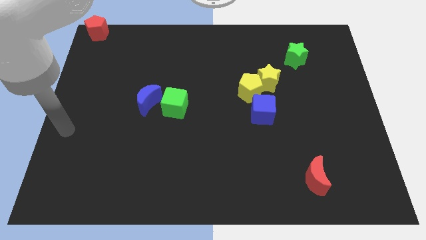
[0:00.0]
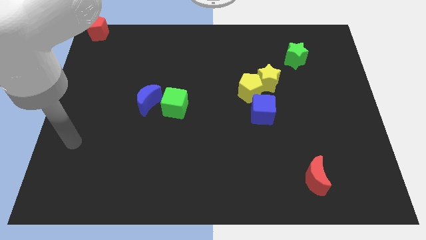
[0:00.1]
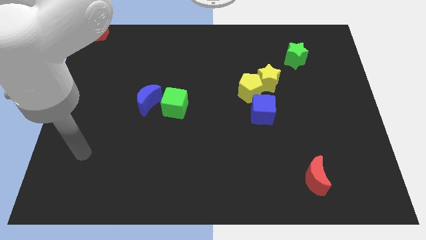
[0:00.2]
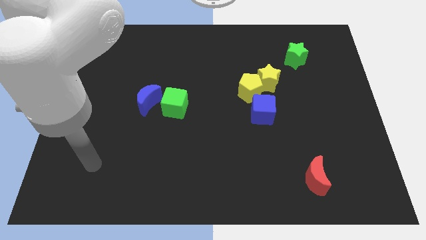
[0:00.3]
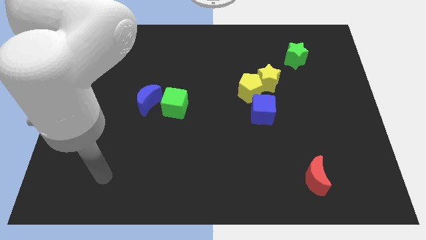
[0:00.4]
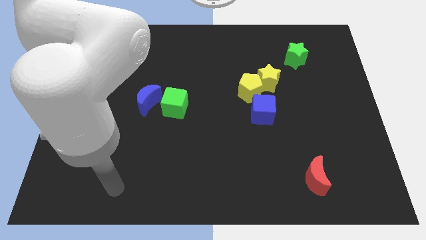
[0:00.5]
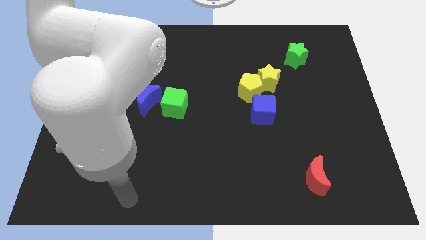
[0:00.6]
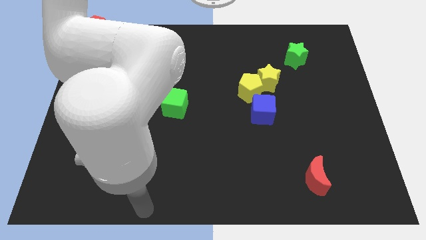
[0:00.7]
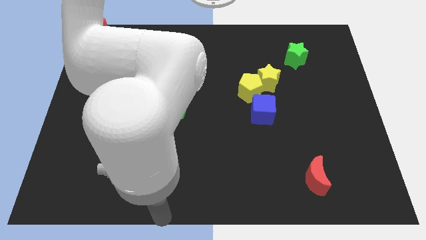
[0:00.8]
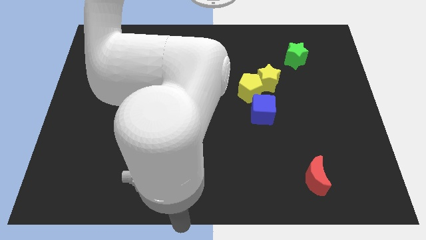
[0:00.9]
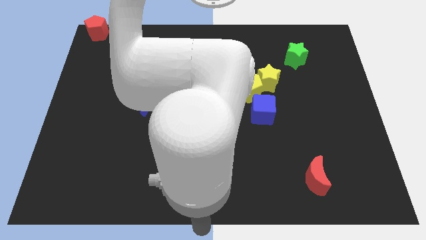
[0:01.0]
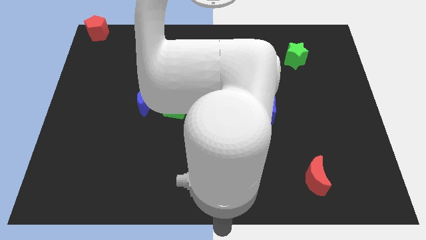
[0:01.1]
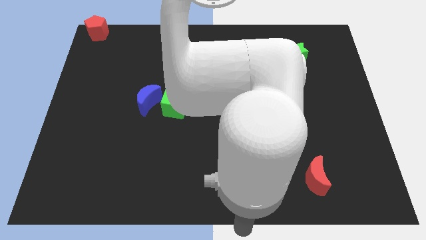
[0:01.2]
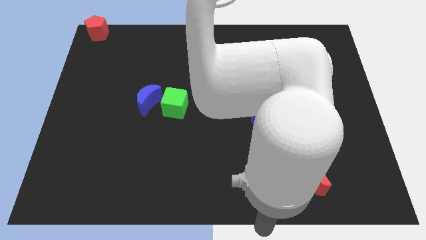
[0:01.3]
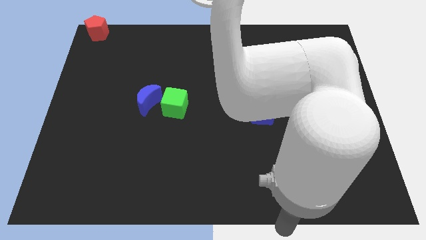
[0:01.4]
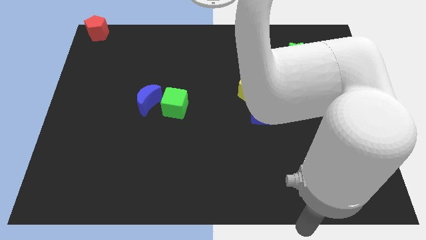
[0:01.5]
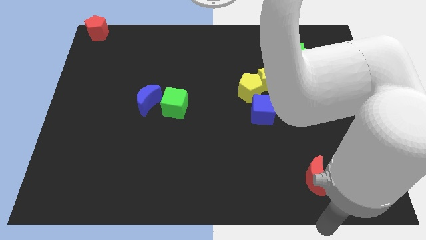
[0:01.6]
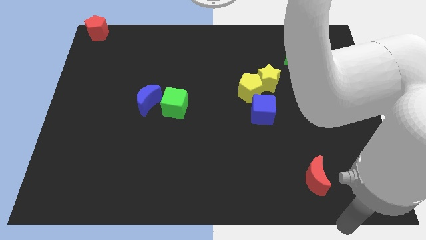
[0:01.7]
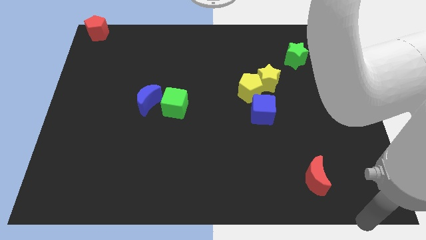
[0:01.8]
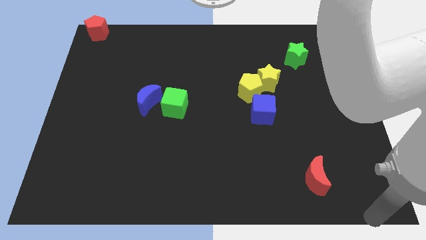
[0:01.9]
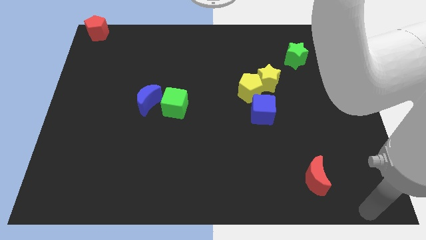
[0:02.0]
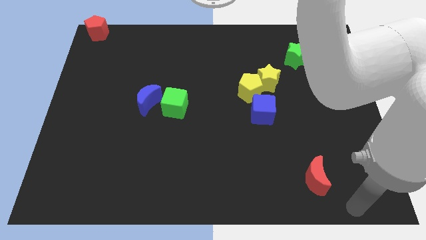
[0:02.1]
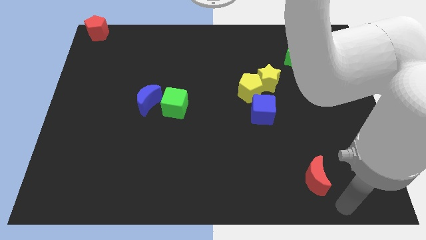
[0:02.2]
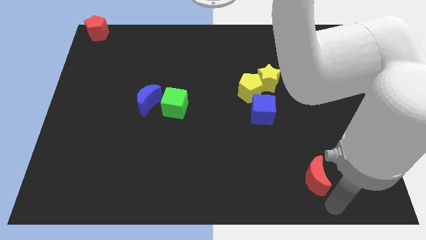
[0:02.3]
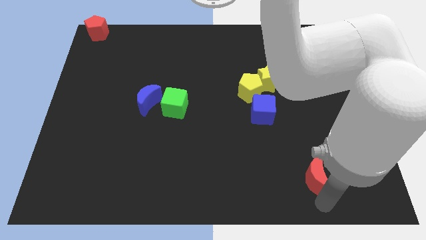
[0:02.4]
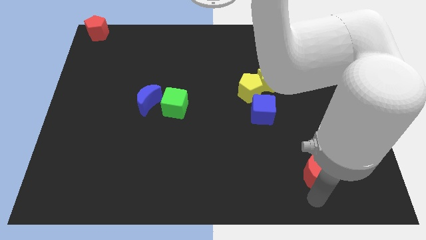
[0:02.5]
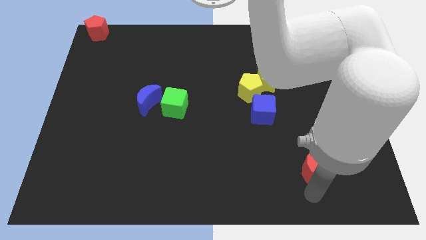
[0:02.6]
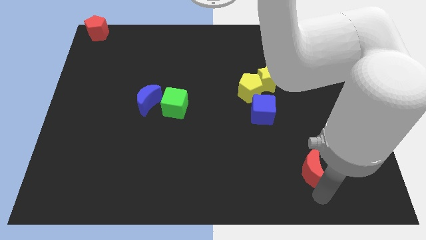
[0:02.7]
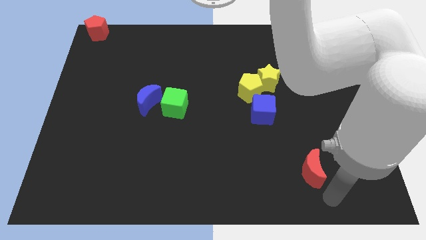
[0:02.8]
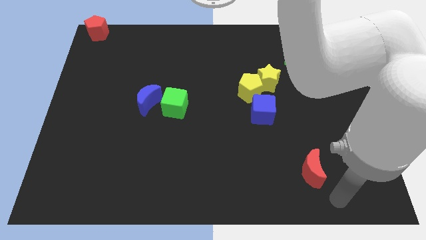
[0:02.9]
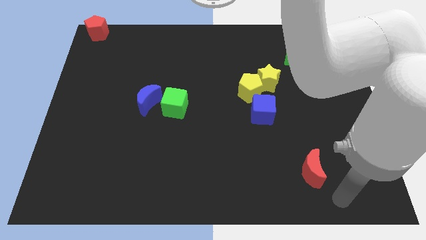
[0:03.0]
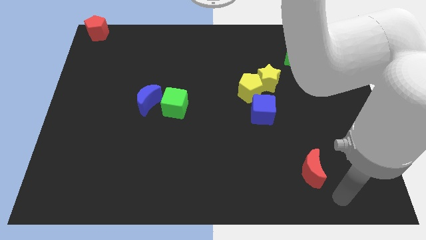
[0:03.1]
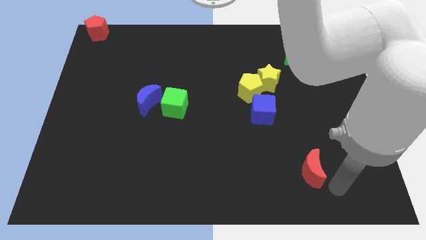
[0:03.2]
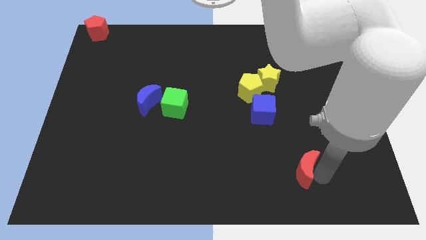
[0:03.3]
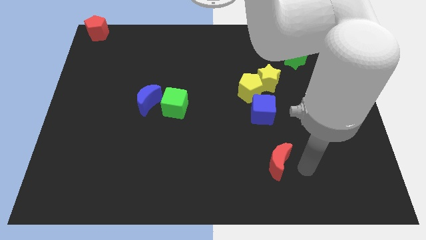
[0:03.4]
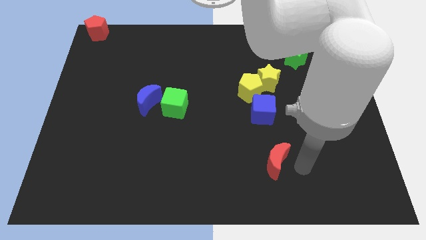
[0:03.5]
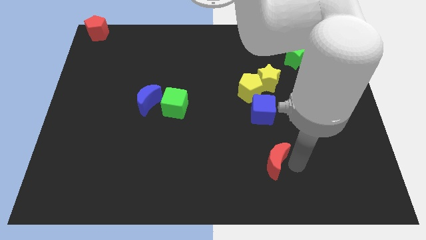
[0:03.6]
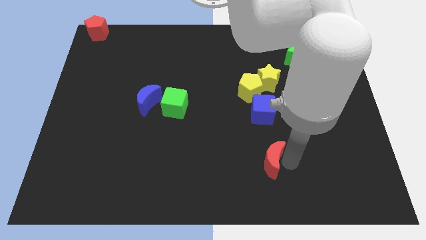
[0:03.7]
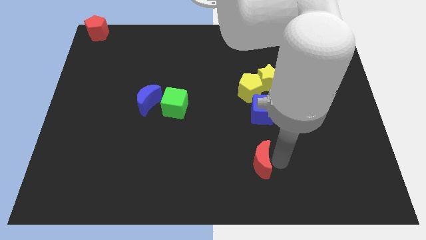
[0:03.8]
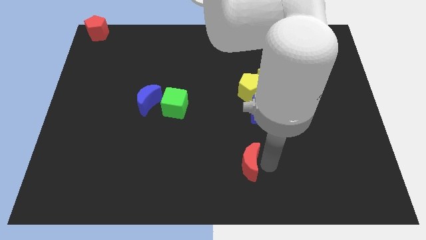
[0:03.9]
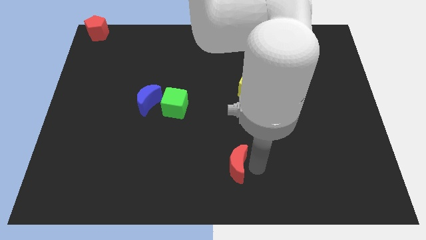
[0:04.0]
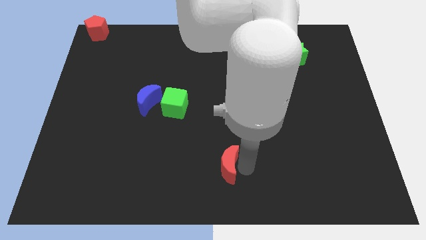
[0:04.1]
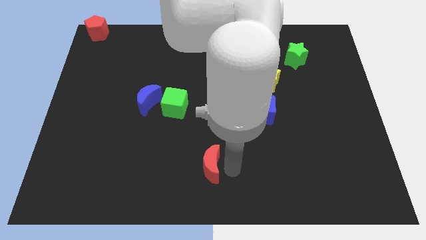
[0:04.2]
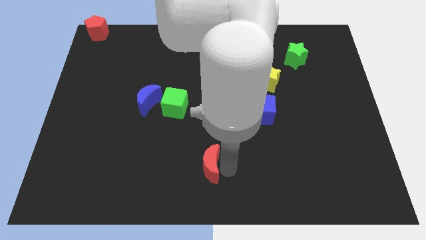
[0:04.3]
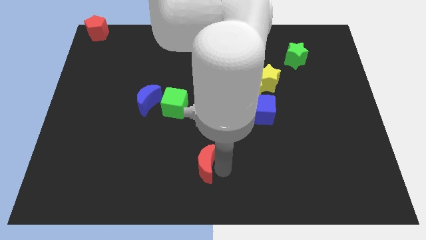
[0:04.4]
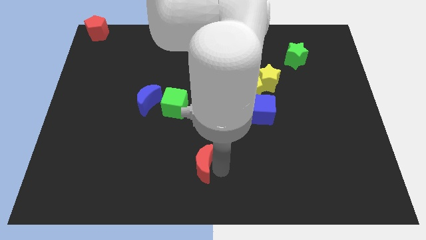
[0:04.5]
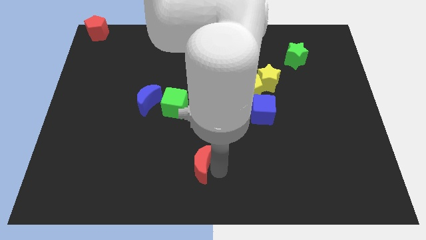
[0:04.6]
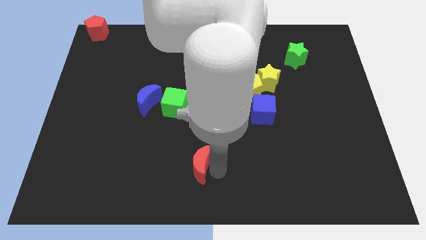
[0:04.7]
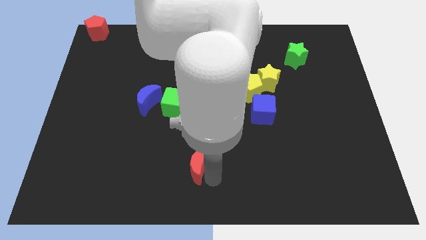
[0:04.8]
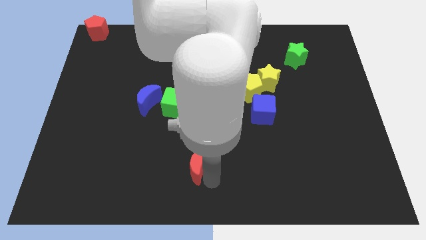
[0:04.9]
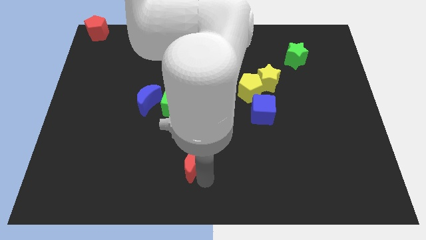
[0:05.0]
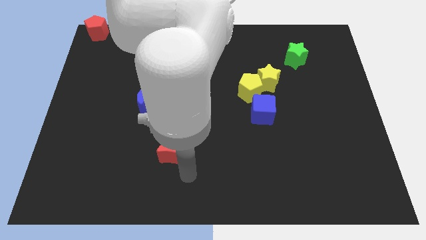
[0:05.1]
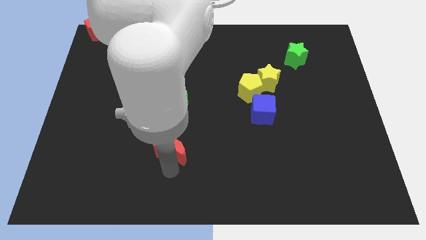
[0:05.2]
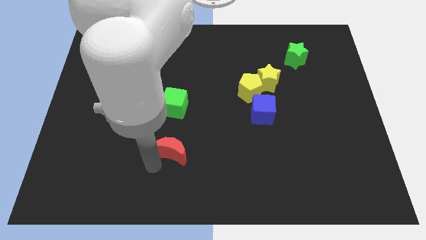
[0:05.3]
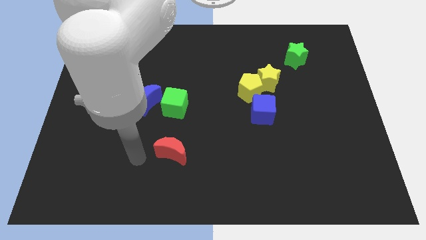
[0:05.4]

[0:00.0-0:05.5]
place the red moon below the green cube

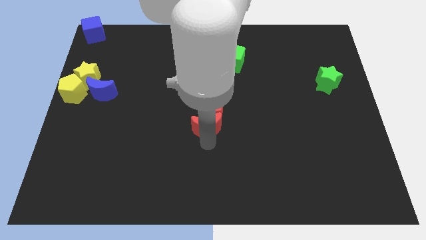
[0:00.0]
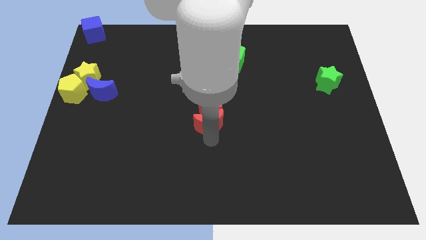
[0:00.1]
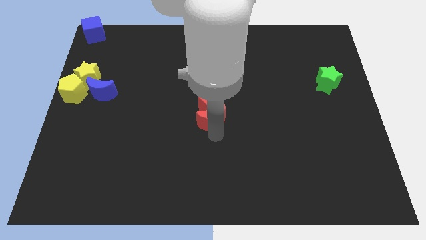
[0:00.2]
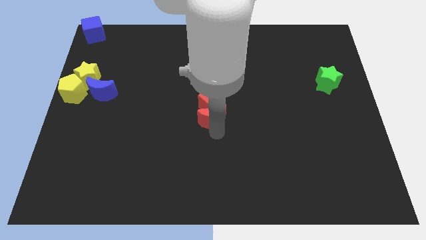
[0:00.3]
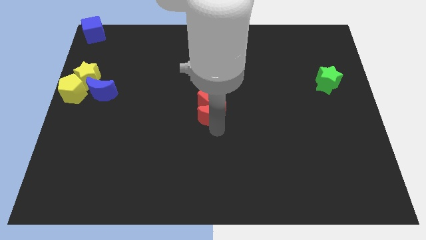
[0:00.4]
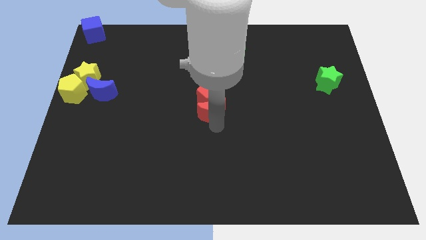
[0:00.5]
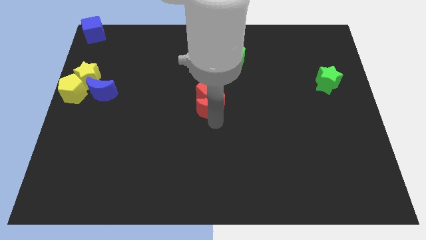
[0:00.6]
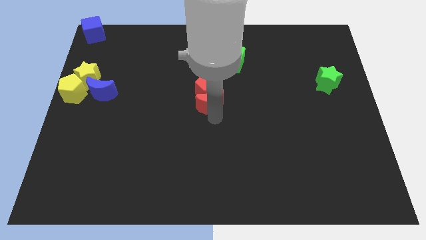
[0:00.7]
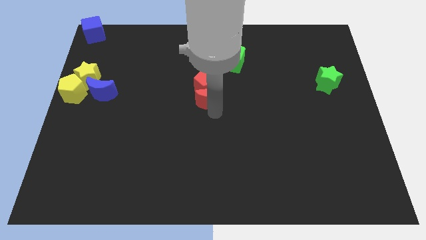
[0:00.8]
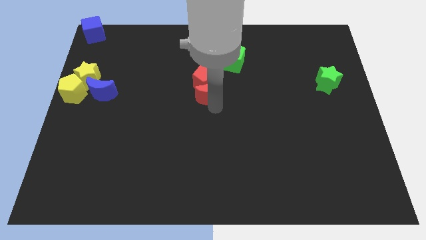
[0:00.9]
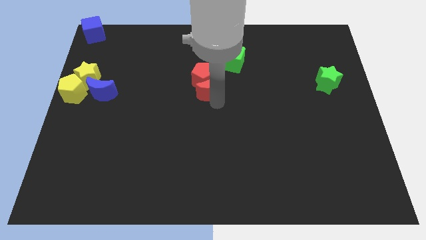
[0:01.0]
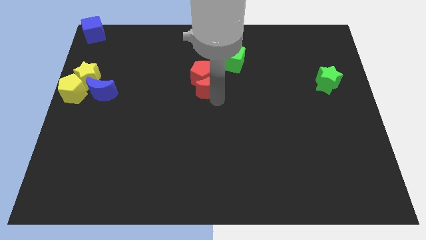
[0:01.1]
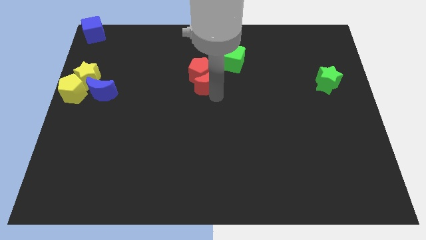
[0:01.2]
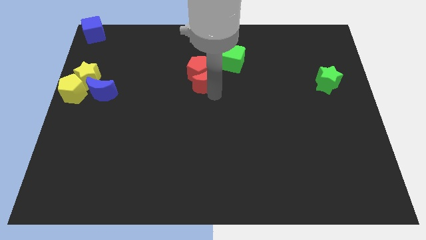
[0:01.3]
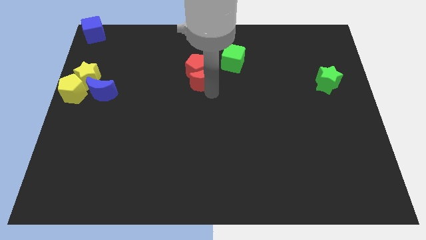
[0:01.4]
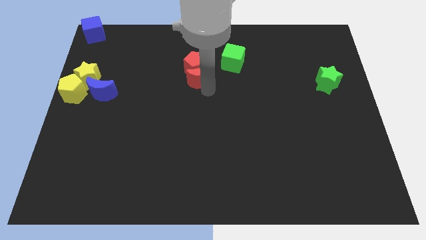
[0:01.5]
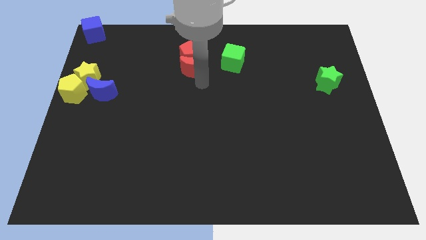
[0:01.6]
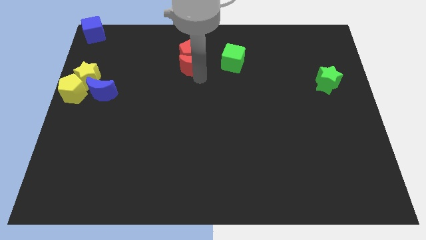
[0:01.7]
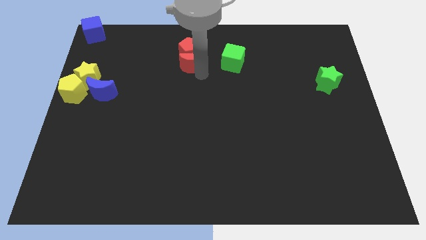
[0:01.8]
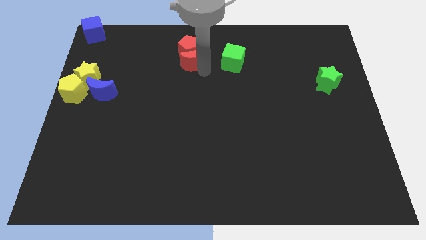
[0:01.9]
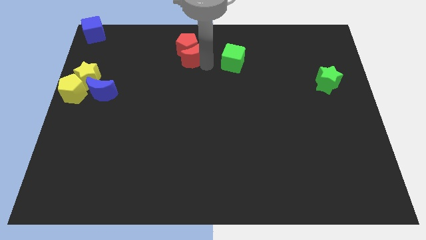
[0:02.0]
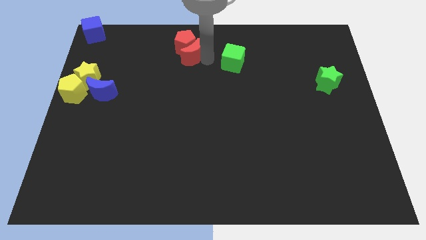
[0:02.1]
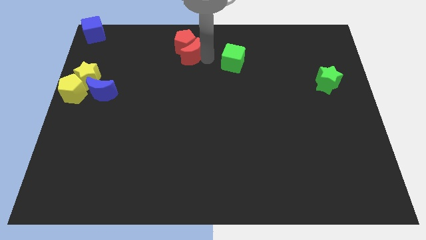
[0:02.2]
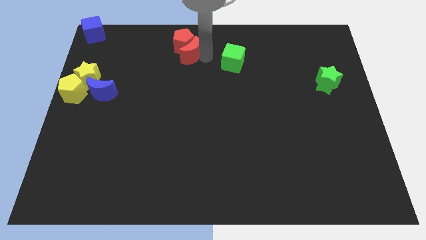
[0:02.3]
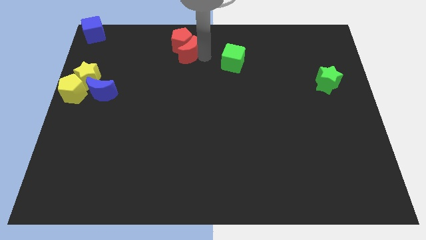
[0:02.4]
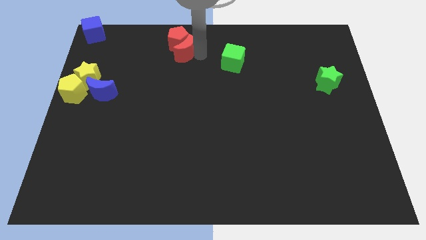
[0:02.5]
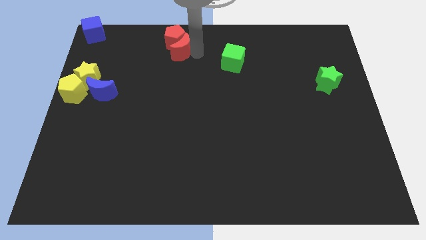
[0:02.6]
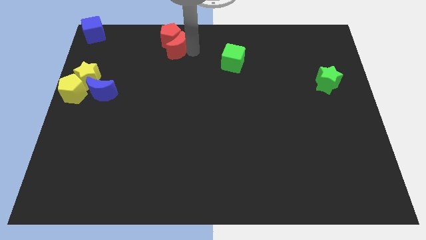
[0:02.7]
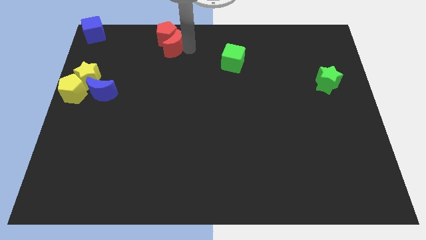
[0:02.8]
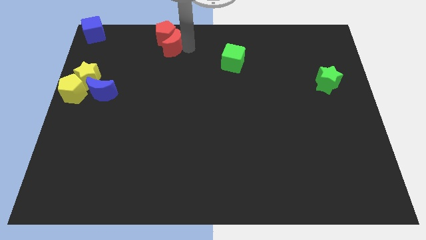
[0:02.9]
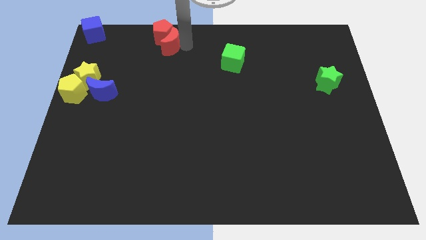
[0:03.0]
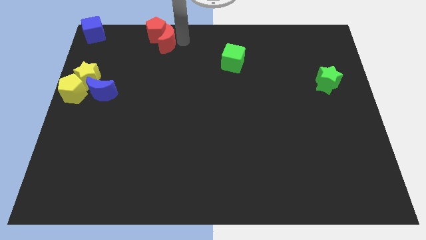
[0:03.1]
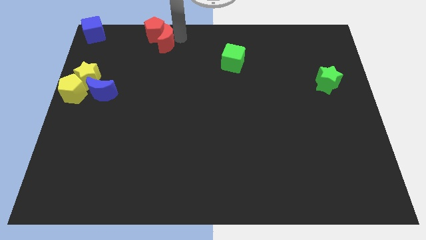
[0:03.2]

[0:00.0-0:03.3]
put the red blocks right to the blue cube
